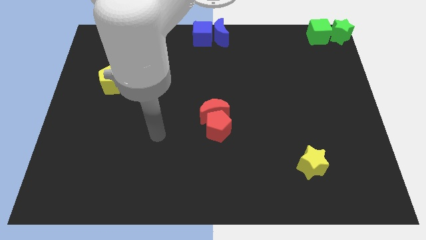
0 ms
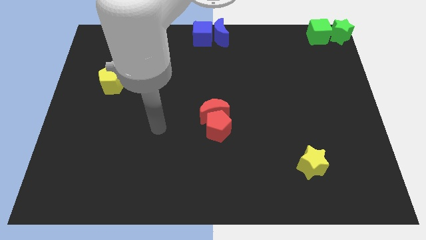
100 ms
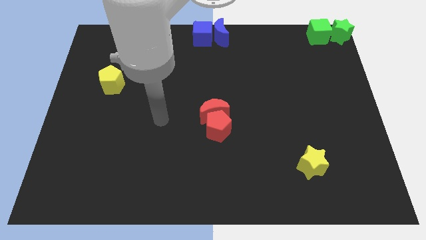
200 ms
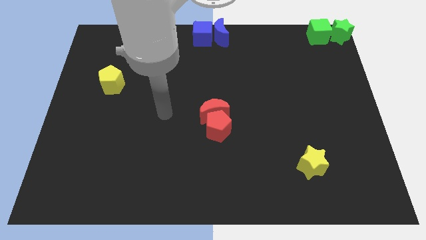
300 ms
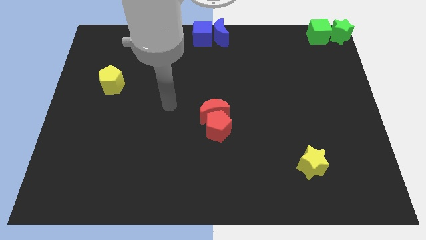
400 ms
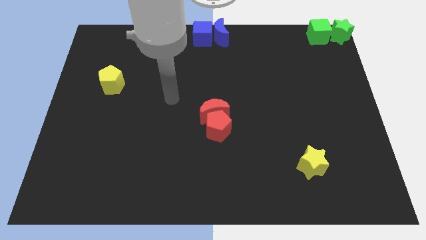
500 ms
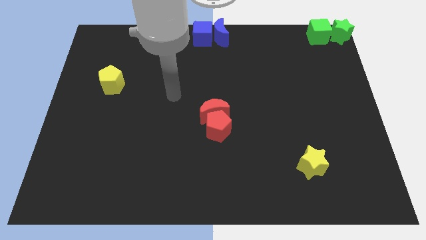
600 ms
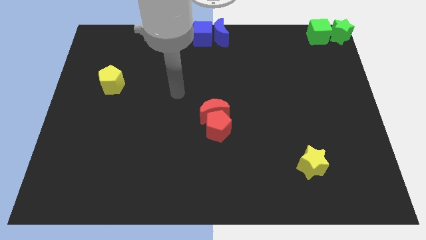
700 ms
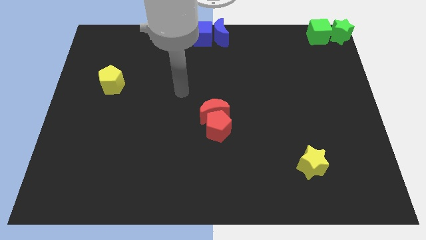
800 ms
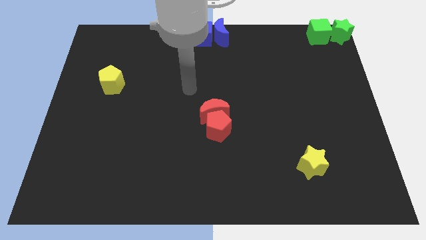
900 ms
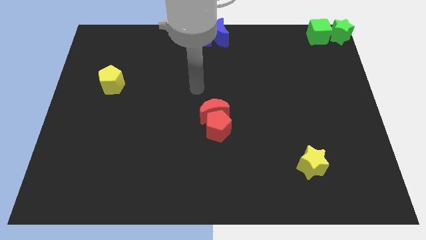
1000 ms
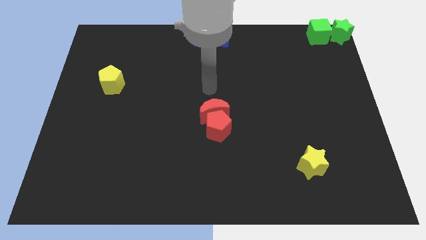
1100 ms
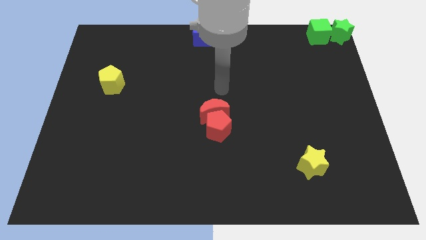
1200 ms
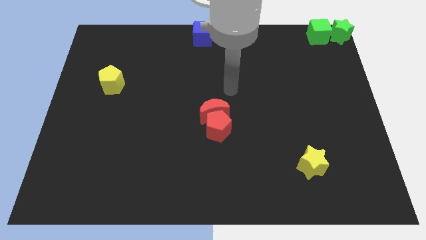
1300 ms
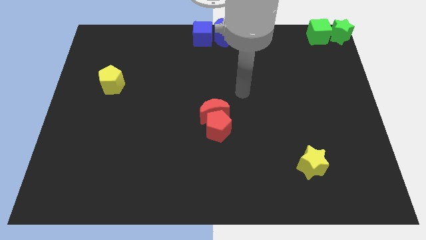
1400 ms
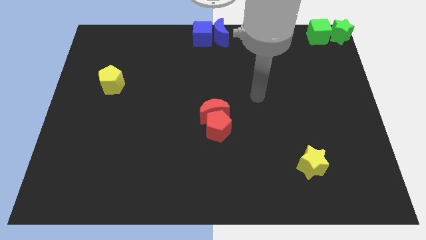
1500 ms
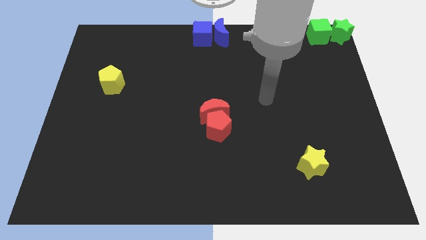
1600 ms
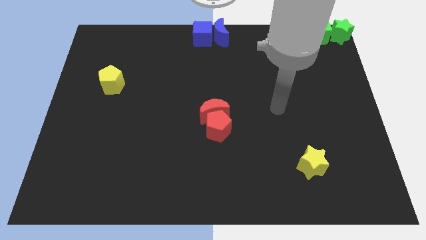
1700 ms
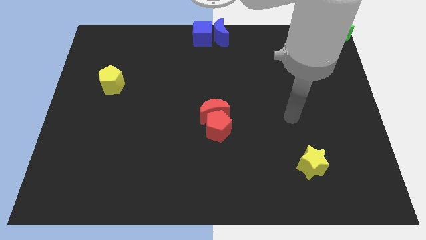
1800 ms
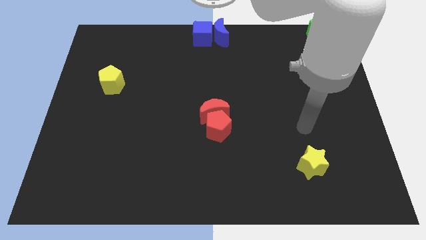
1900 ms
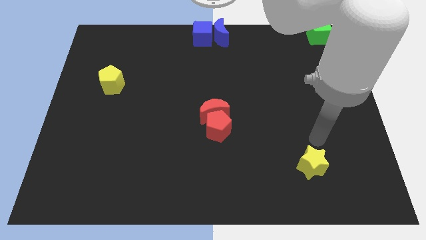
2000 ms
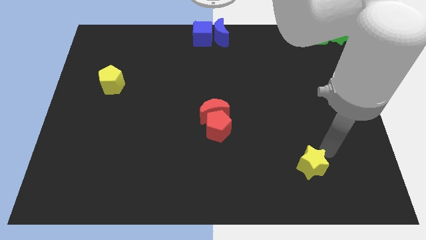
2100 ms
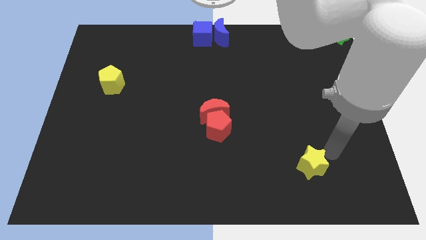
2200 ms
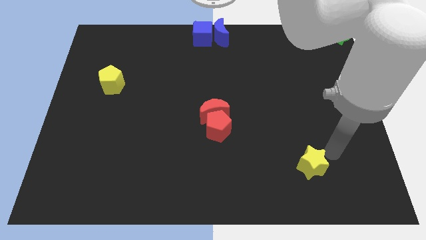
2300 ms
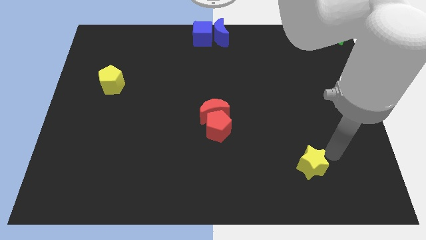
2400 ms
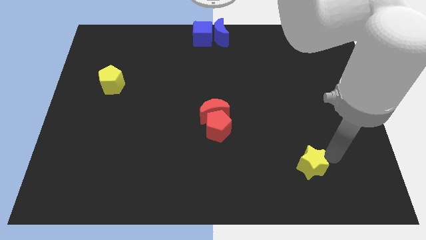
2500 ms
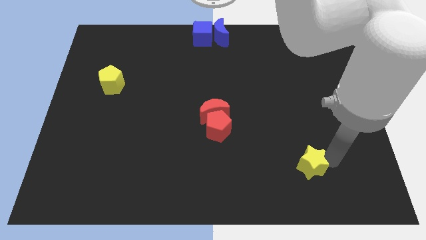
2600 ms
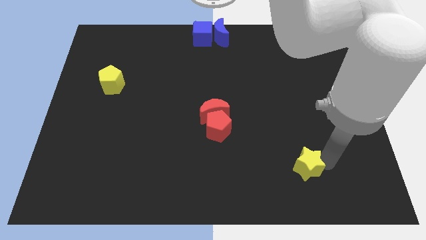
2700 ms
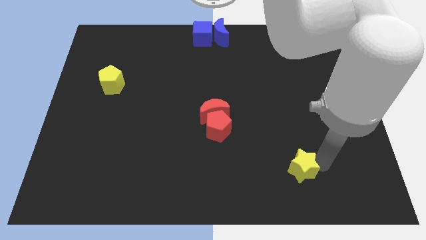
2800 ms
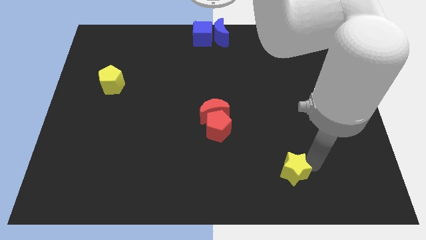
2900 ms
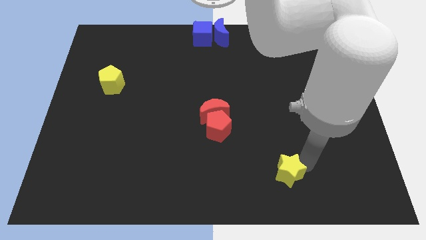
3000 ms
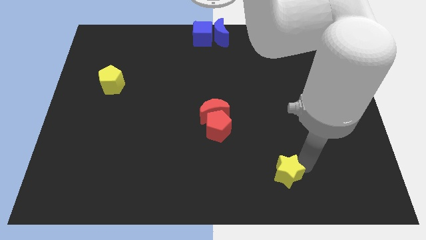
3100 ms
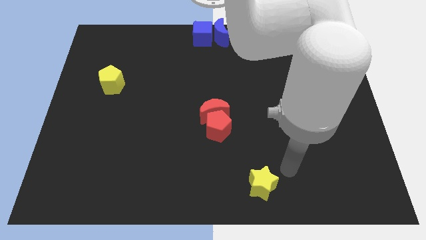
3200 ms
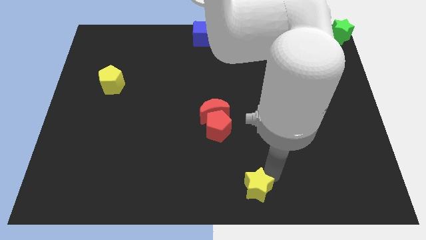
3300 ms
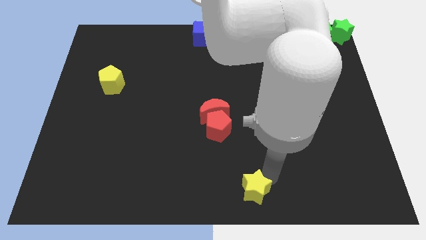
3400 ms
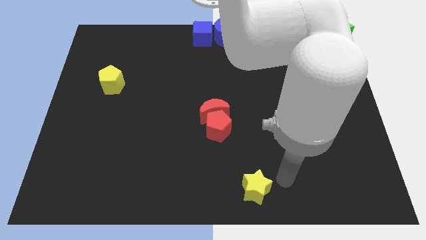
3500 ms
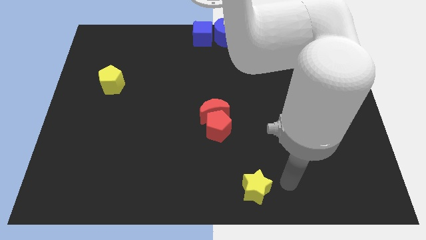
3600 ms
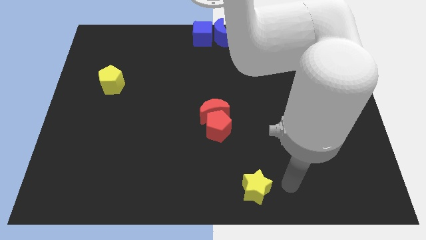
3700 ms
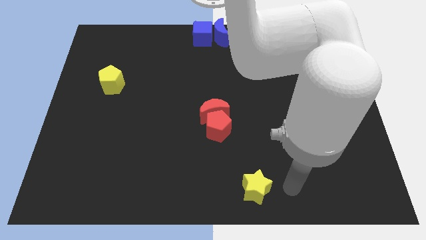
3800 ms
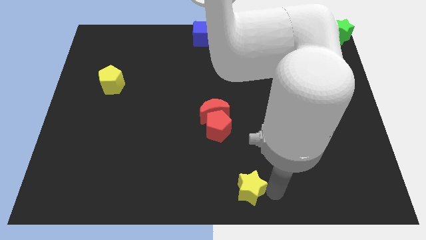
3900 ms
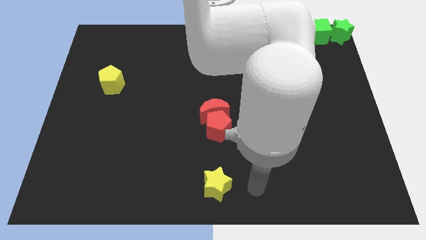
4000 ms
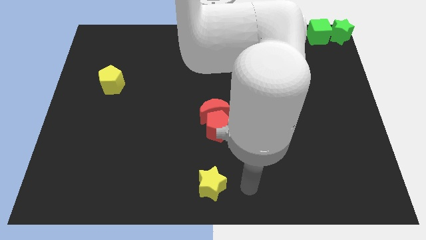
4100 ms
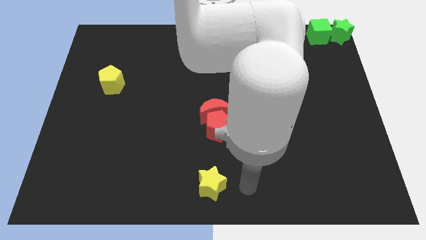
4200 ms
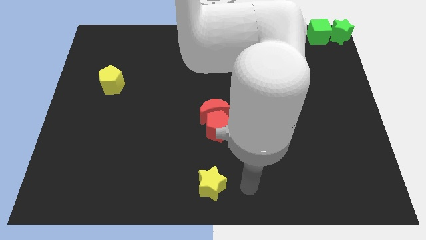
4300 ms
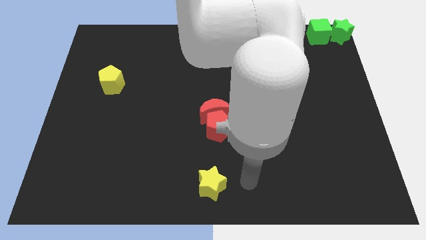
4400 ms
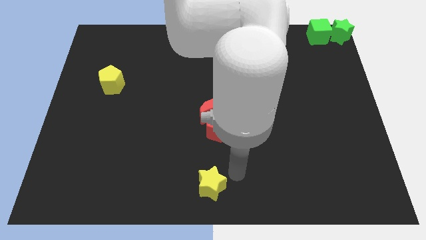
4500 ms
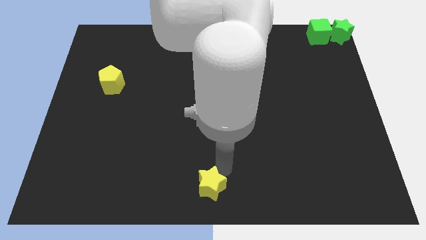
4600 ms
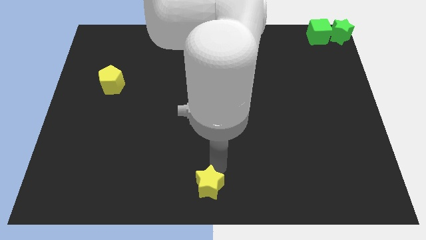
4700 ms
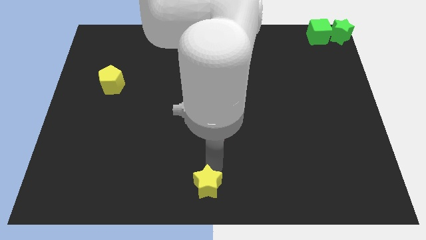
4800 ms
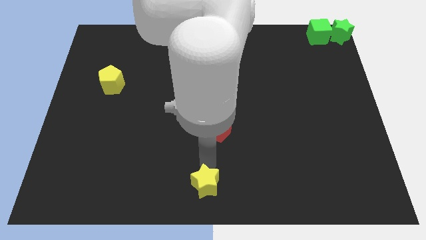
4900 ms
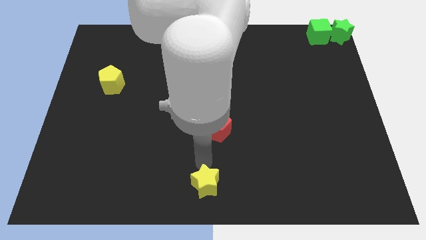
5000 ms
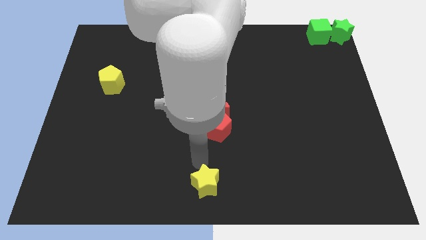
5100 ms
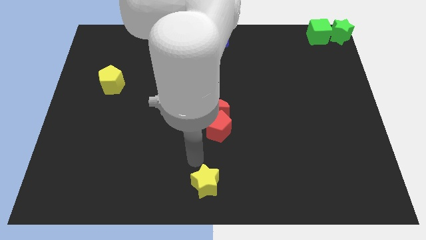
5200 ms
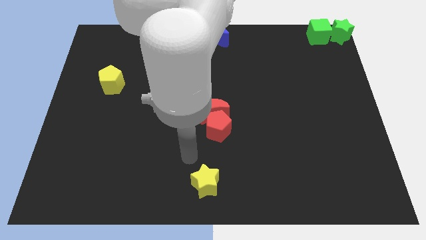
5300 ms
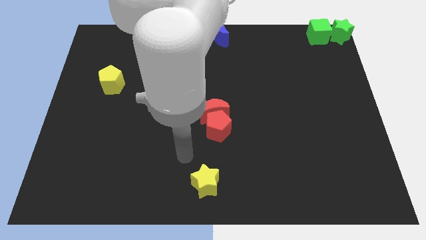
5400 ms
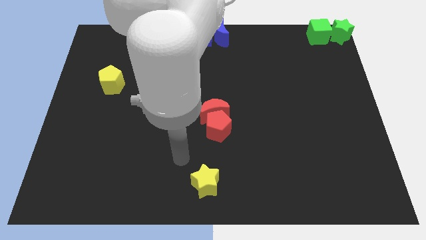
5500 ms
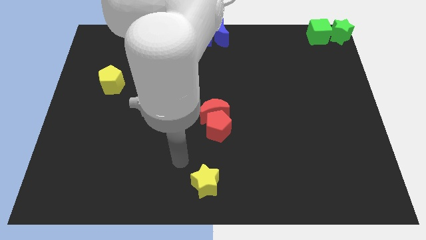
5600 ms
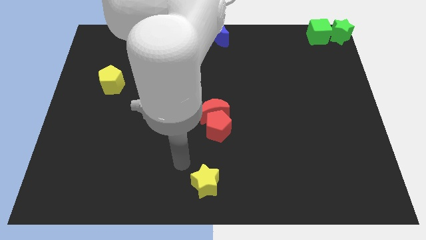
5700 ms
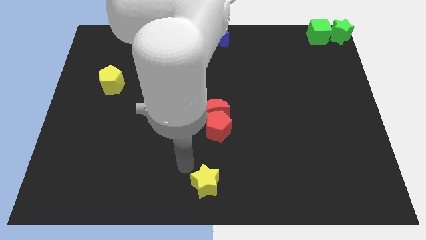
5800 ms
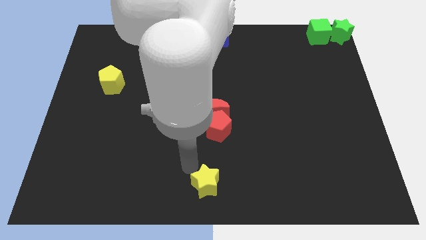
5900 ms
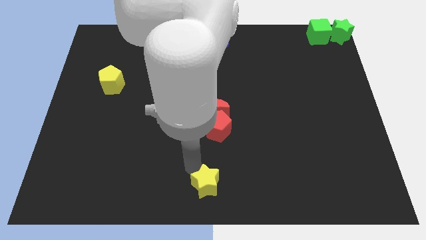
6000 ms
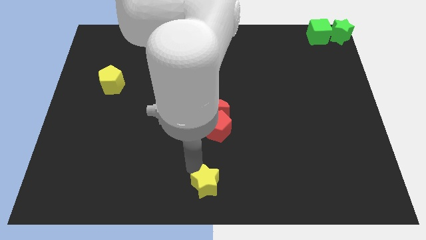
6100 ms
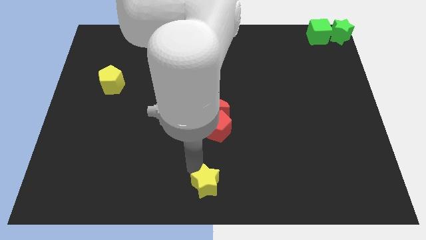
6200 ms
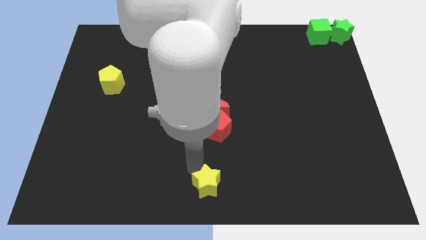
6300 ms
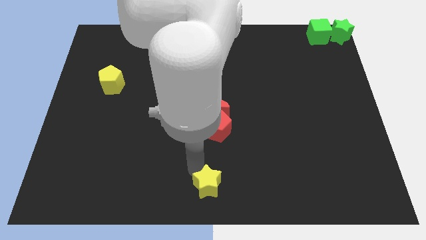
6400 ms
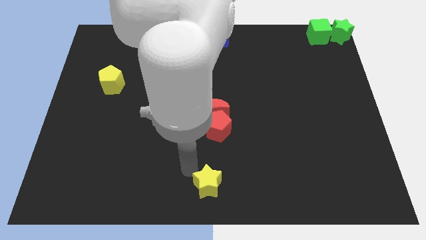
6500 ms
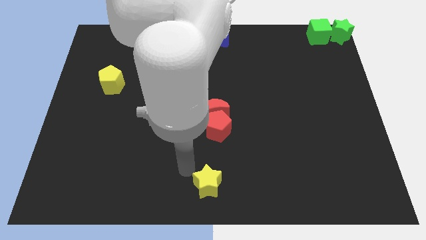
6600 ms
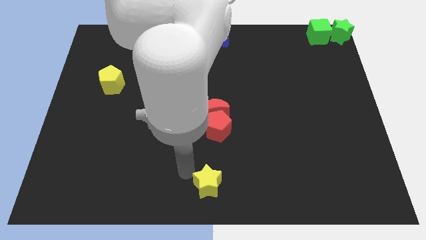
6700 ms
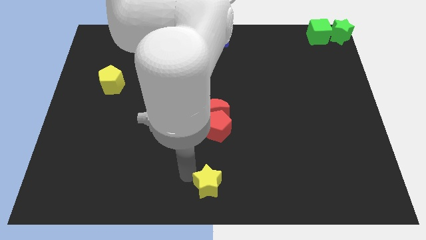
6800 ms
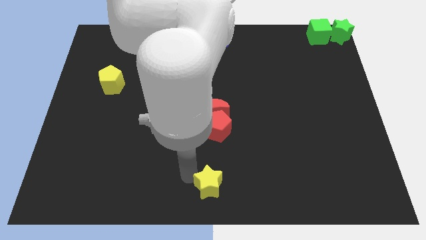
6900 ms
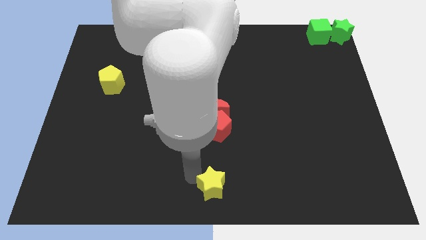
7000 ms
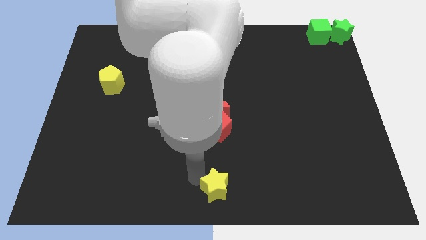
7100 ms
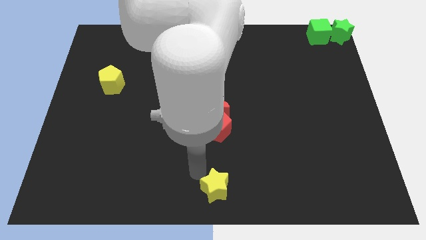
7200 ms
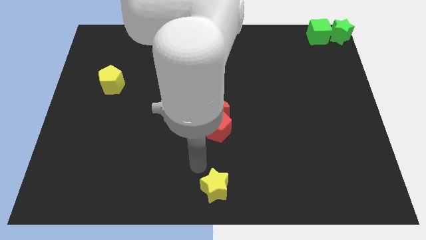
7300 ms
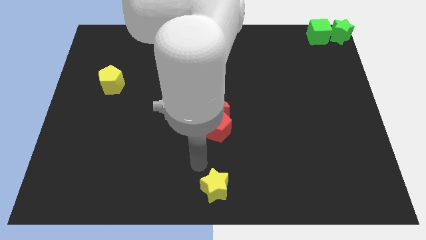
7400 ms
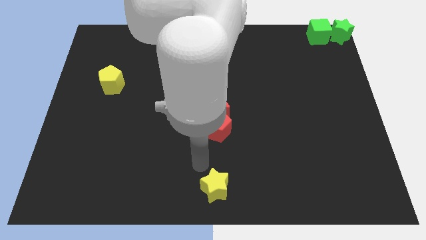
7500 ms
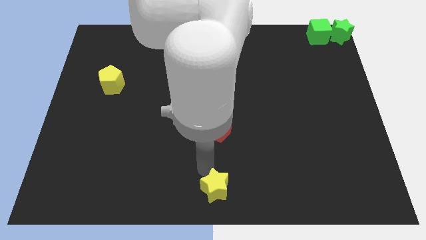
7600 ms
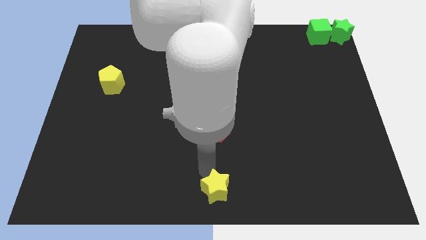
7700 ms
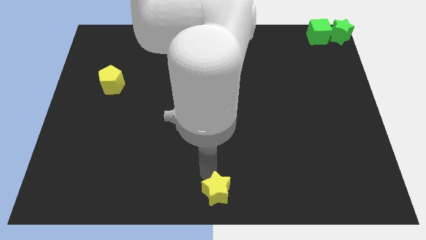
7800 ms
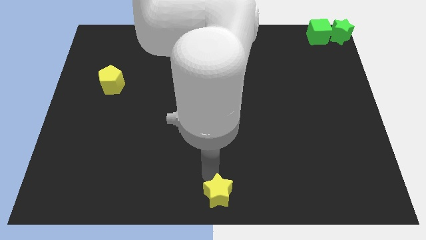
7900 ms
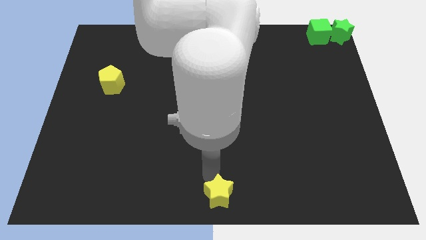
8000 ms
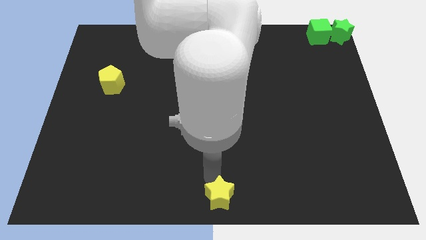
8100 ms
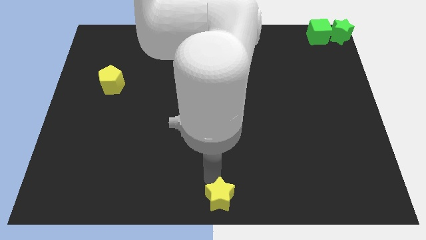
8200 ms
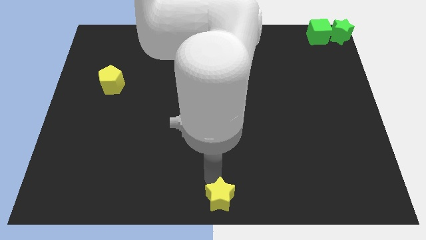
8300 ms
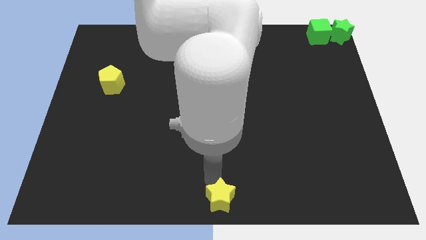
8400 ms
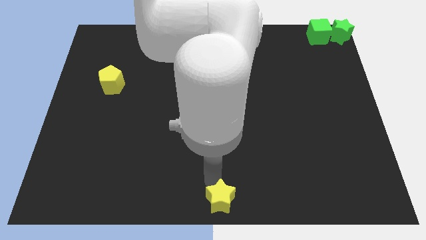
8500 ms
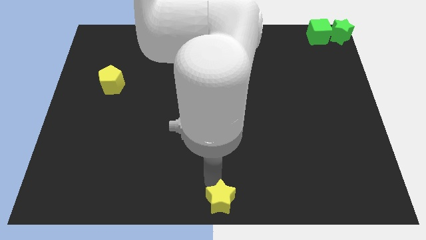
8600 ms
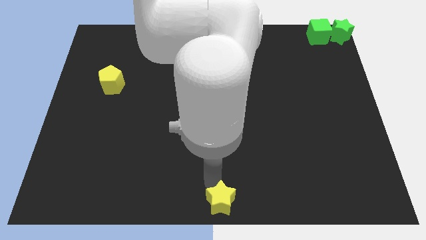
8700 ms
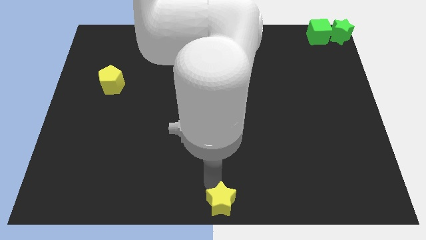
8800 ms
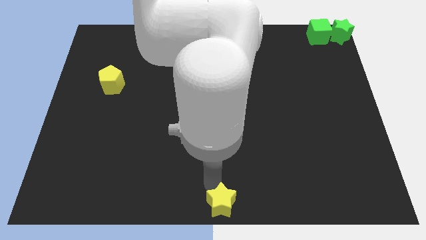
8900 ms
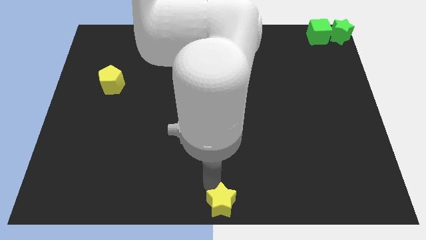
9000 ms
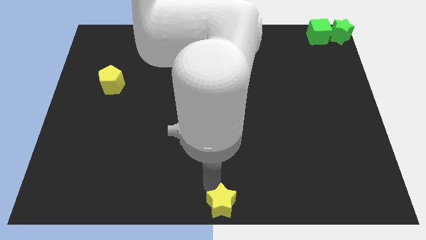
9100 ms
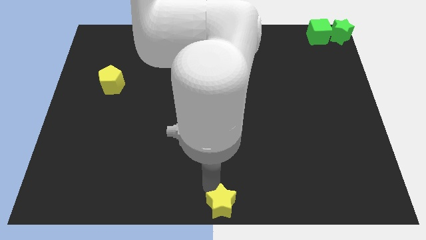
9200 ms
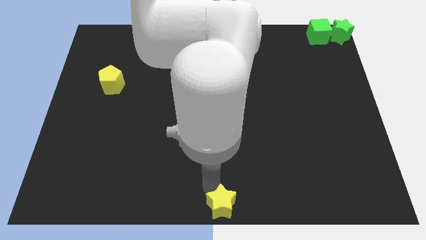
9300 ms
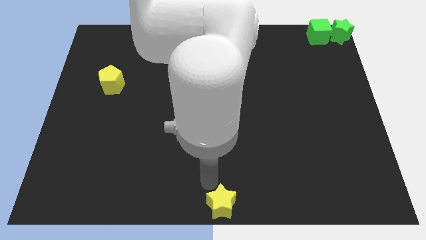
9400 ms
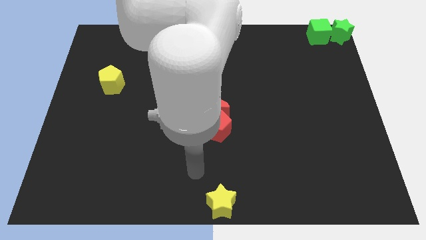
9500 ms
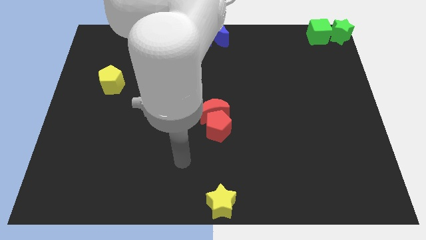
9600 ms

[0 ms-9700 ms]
put the yellow star at the bottom center
